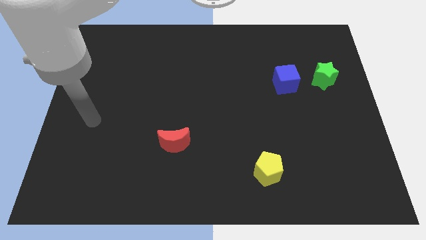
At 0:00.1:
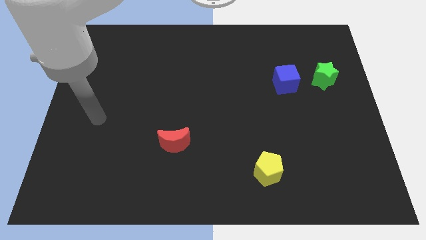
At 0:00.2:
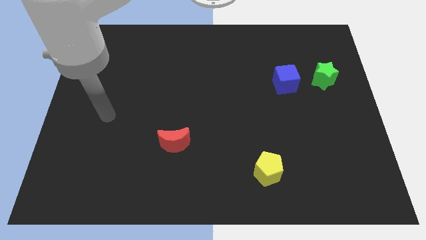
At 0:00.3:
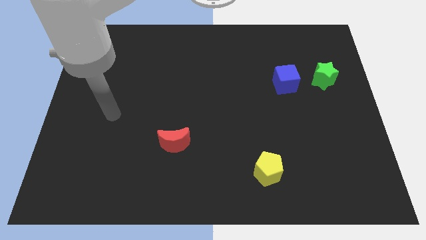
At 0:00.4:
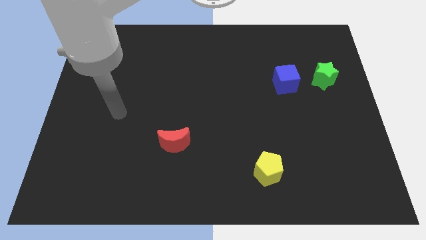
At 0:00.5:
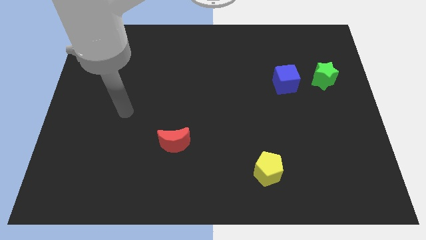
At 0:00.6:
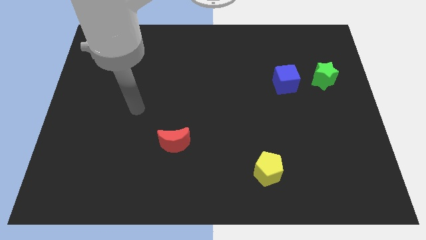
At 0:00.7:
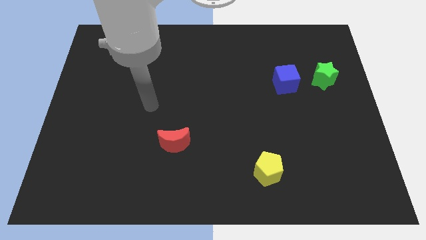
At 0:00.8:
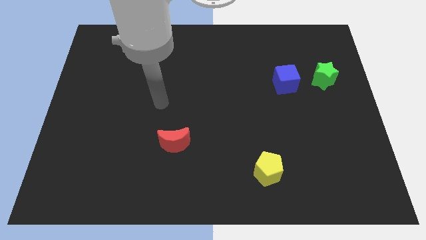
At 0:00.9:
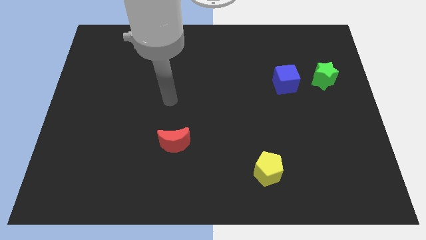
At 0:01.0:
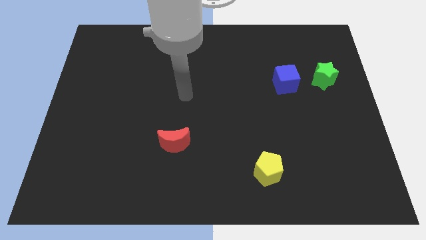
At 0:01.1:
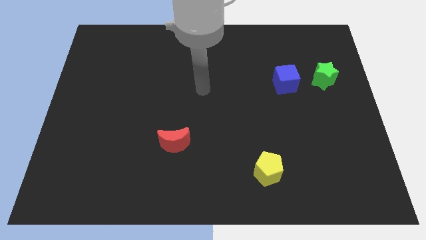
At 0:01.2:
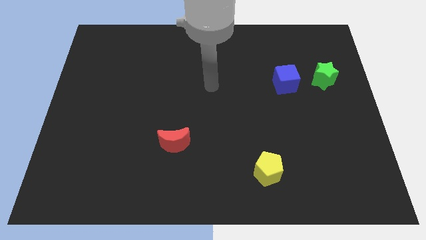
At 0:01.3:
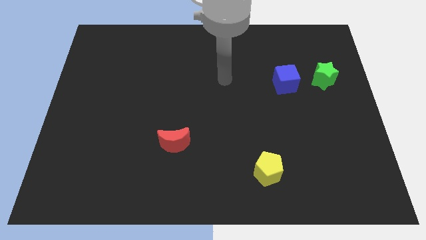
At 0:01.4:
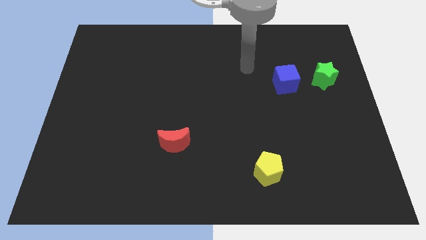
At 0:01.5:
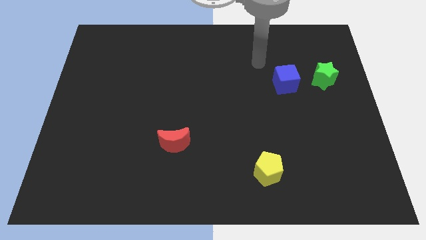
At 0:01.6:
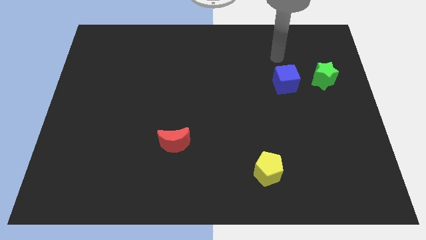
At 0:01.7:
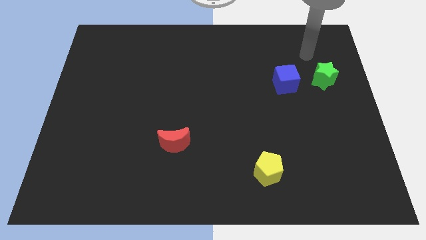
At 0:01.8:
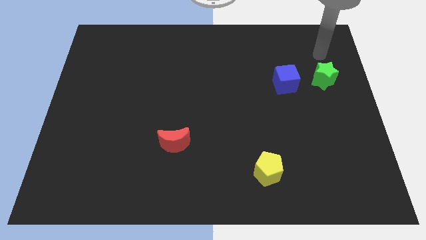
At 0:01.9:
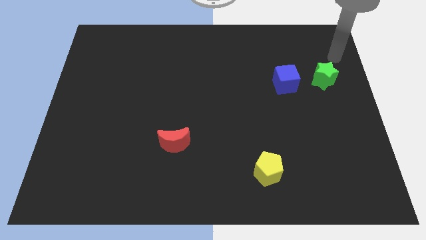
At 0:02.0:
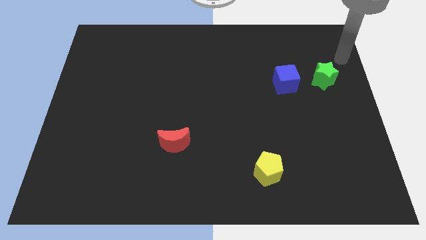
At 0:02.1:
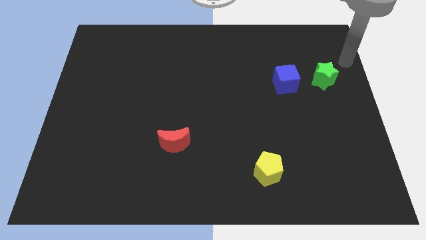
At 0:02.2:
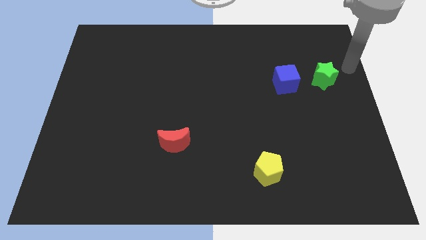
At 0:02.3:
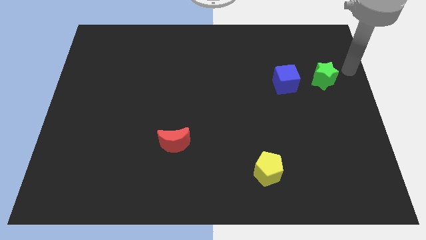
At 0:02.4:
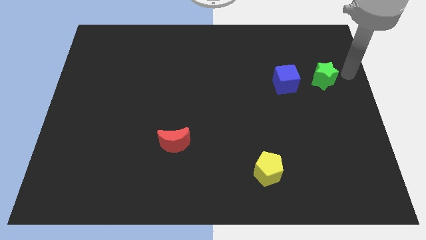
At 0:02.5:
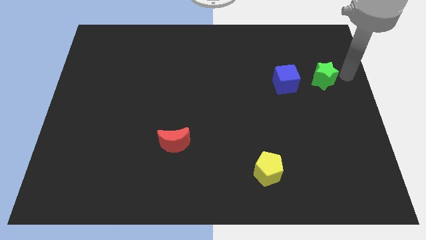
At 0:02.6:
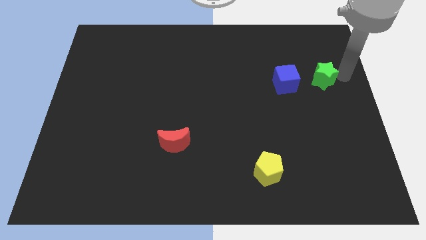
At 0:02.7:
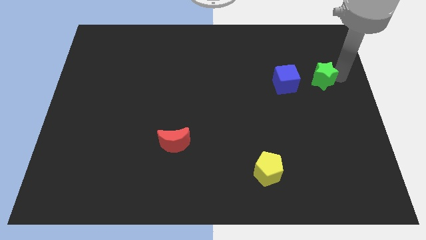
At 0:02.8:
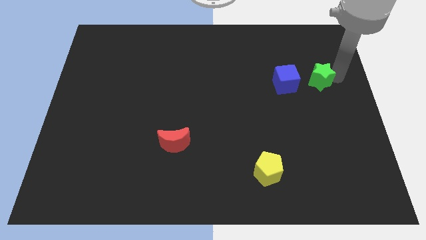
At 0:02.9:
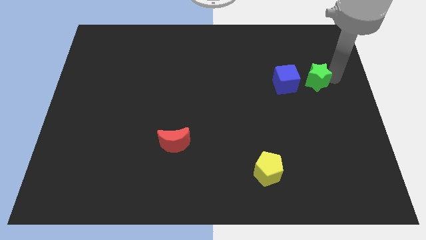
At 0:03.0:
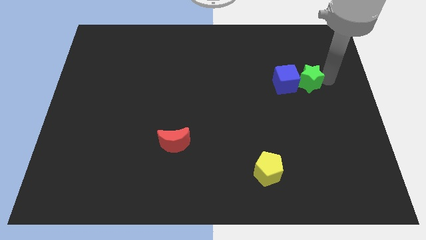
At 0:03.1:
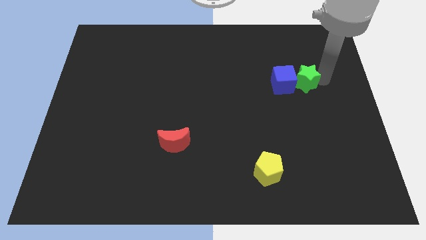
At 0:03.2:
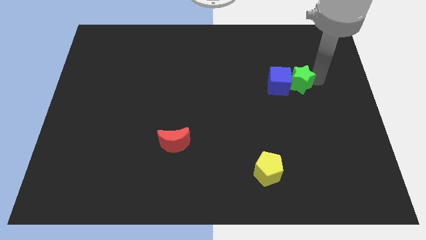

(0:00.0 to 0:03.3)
slide the green star close to the blue cube

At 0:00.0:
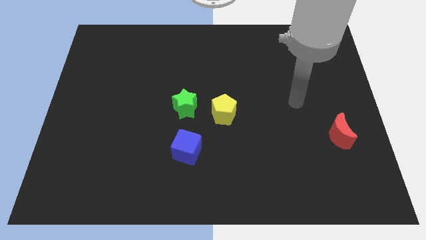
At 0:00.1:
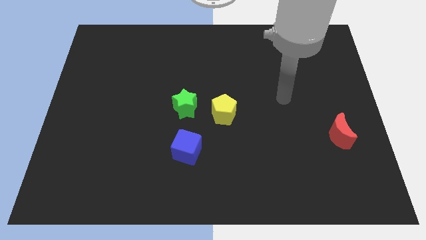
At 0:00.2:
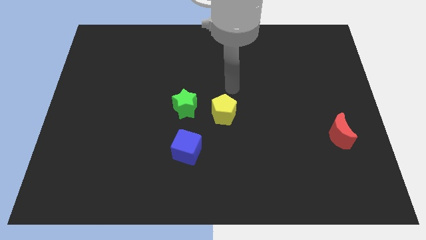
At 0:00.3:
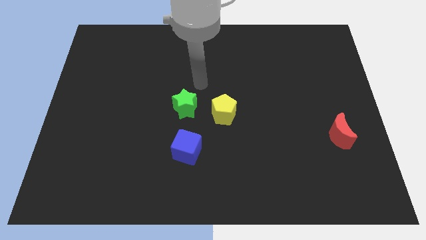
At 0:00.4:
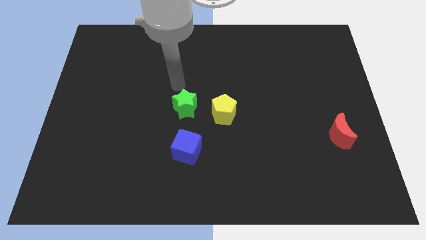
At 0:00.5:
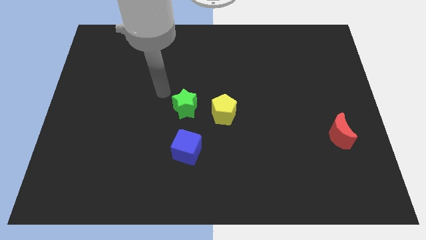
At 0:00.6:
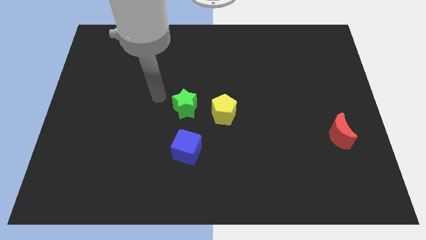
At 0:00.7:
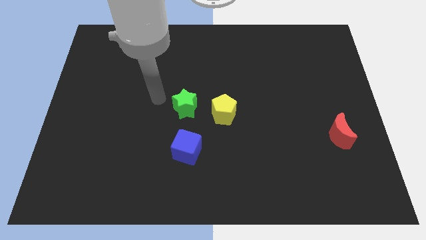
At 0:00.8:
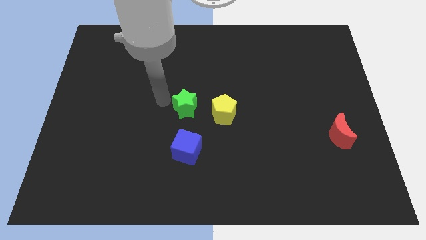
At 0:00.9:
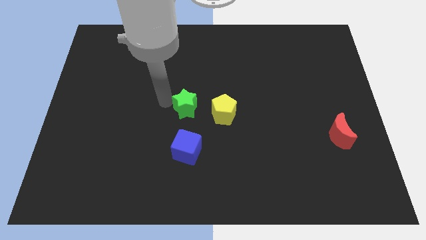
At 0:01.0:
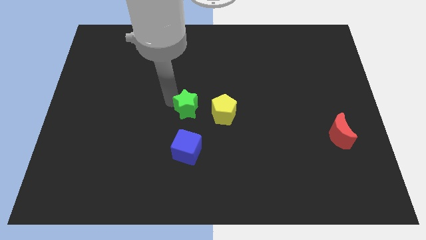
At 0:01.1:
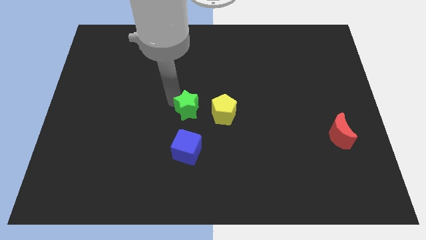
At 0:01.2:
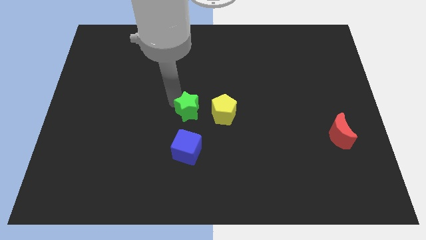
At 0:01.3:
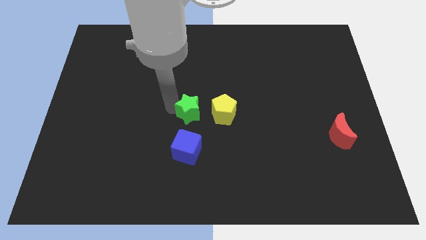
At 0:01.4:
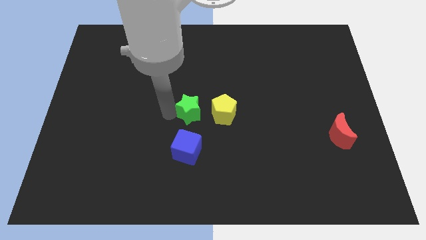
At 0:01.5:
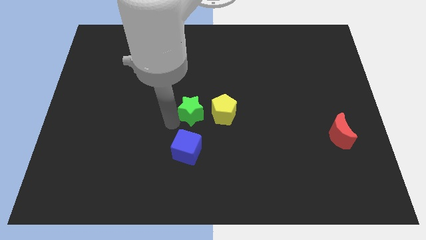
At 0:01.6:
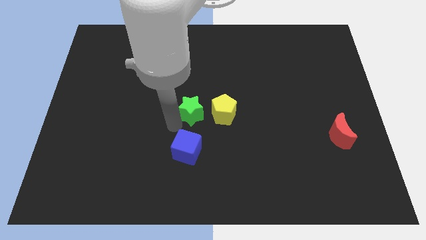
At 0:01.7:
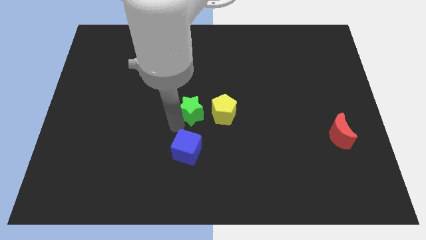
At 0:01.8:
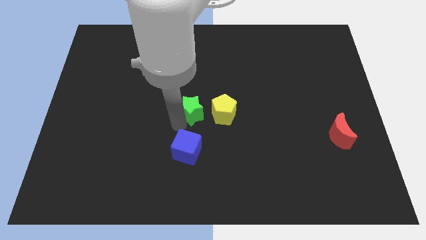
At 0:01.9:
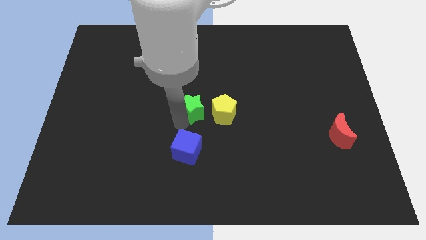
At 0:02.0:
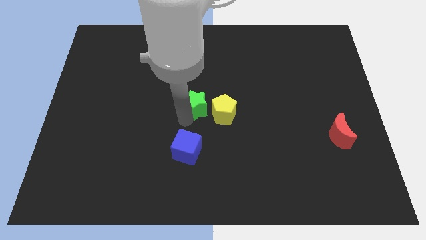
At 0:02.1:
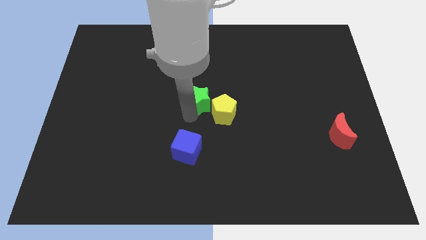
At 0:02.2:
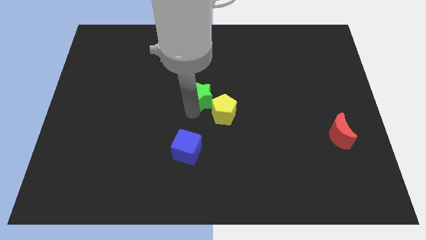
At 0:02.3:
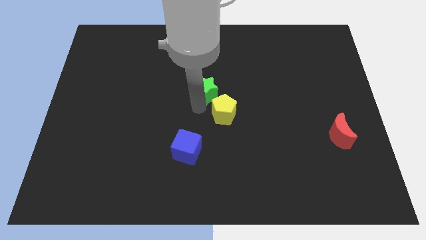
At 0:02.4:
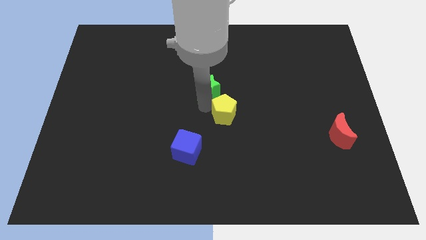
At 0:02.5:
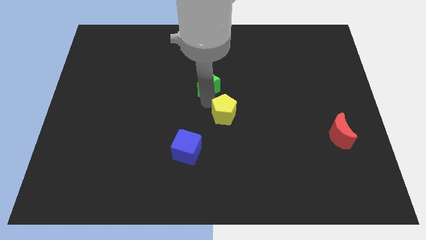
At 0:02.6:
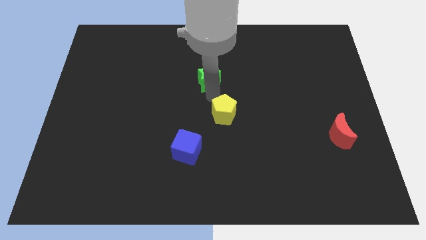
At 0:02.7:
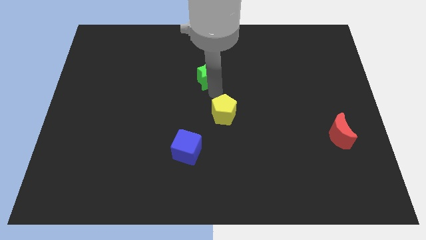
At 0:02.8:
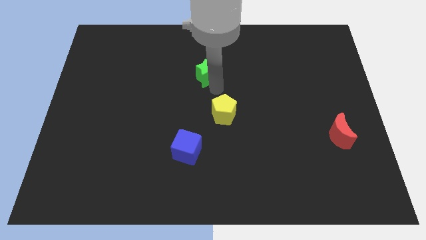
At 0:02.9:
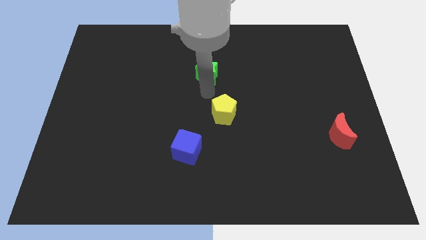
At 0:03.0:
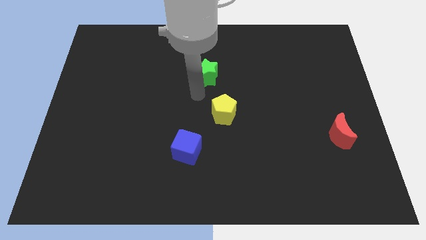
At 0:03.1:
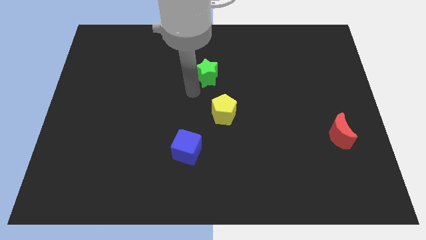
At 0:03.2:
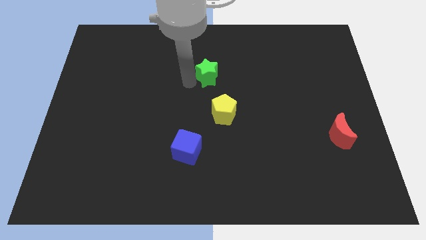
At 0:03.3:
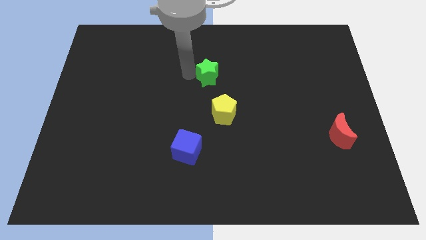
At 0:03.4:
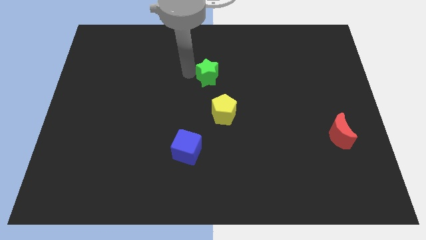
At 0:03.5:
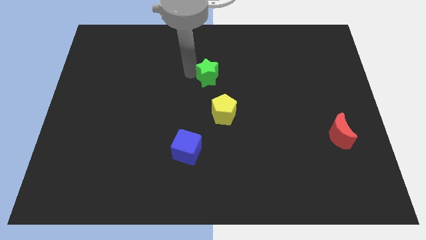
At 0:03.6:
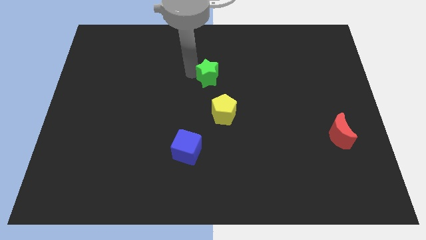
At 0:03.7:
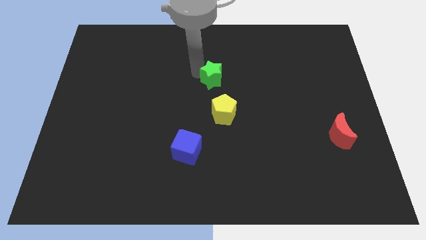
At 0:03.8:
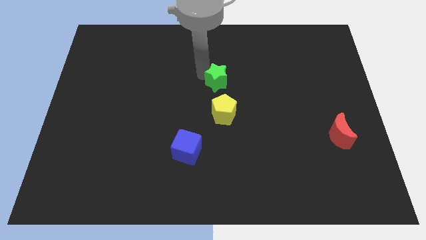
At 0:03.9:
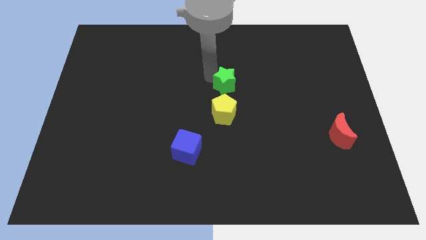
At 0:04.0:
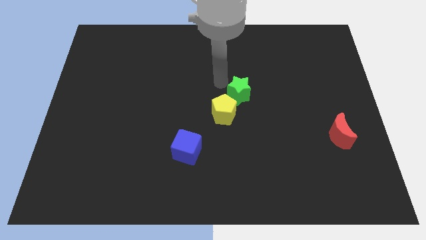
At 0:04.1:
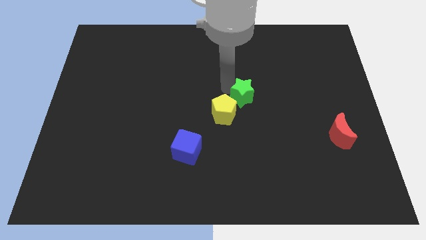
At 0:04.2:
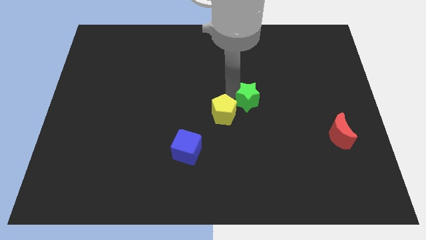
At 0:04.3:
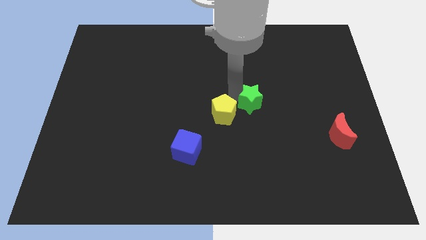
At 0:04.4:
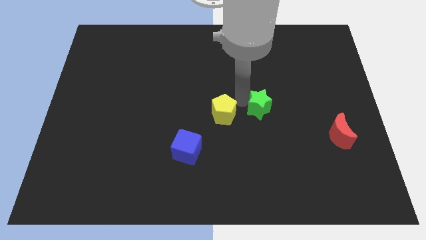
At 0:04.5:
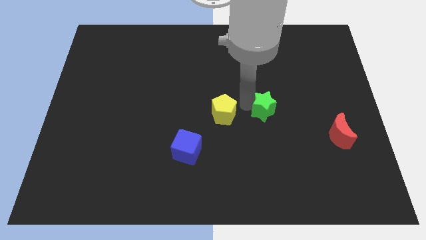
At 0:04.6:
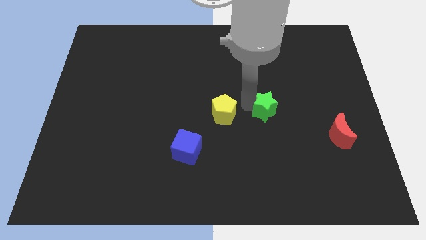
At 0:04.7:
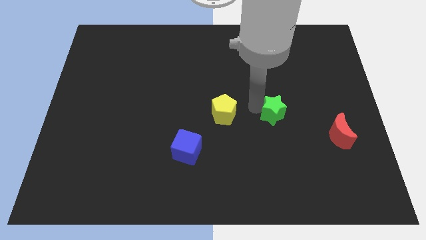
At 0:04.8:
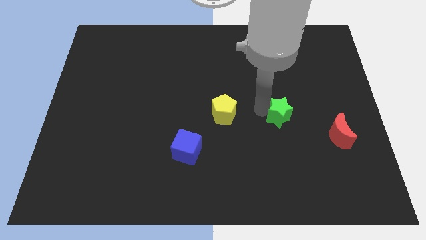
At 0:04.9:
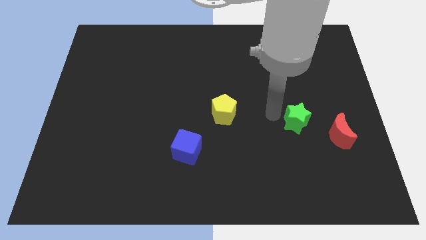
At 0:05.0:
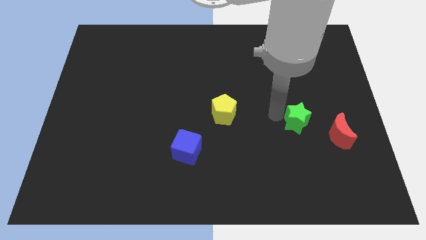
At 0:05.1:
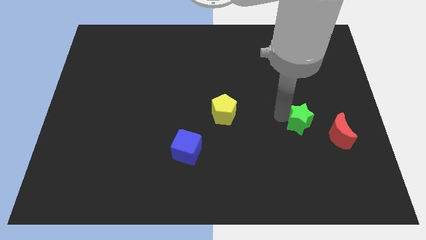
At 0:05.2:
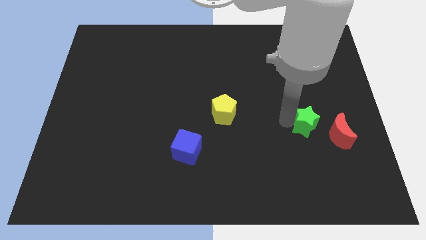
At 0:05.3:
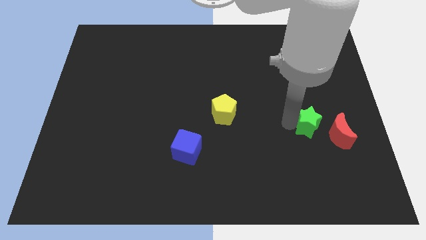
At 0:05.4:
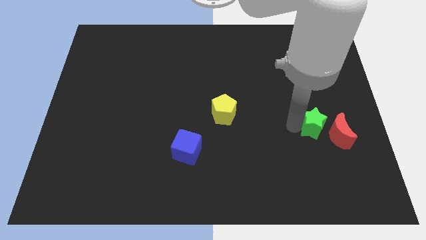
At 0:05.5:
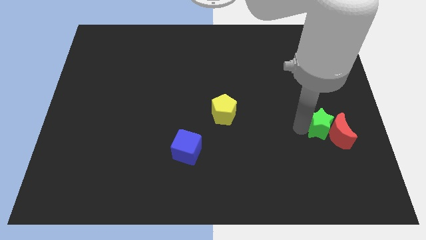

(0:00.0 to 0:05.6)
move the star close to the moon
